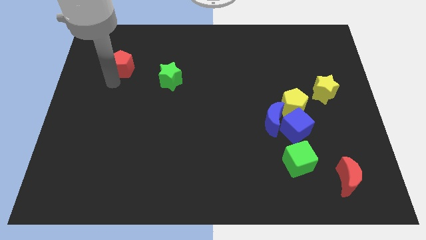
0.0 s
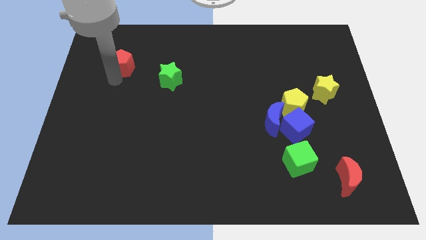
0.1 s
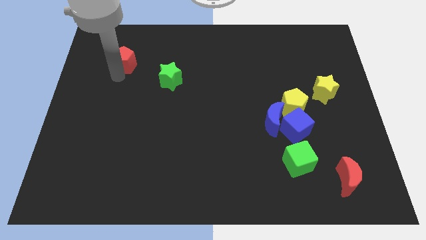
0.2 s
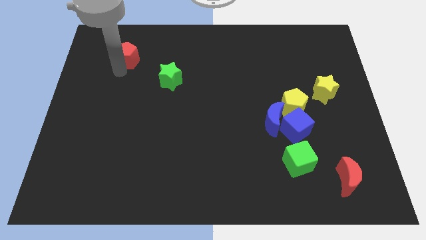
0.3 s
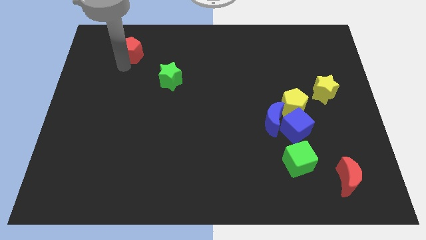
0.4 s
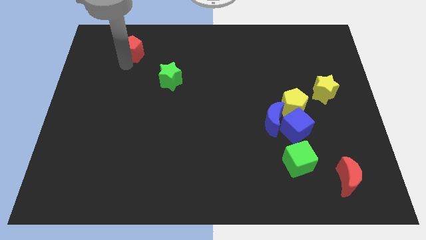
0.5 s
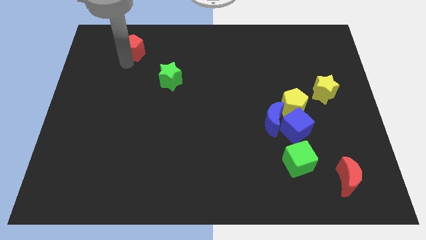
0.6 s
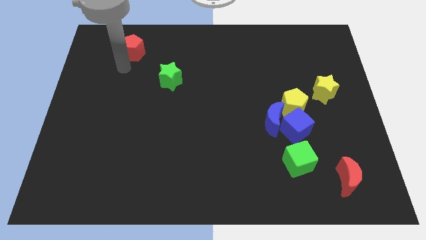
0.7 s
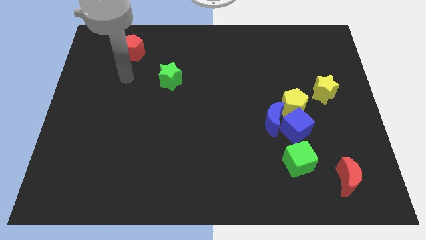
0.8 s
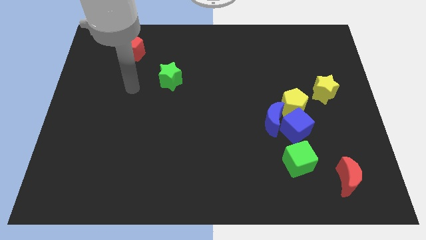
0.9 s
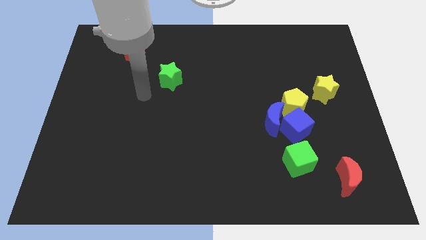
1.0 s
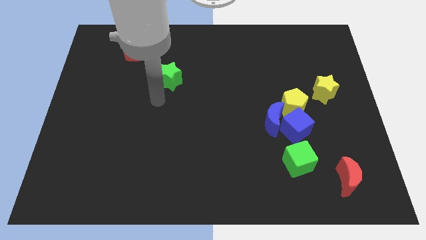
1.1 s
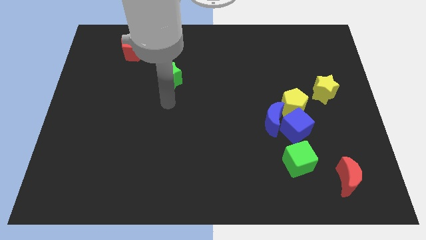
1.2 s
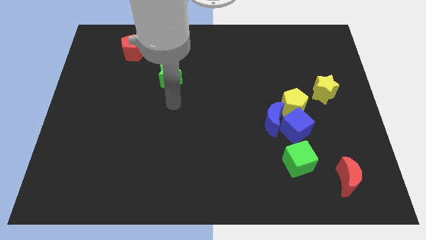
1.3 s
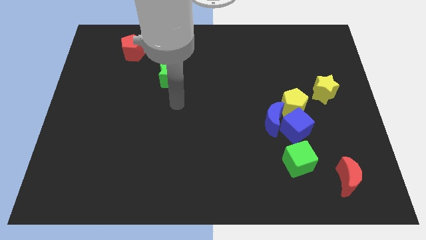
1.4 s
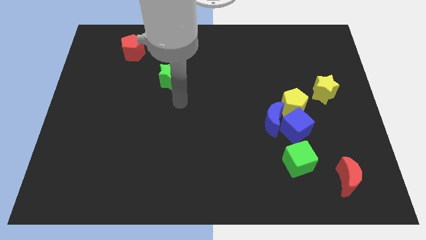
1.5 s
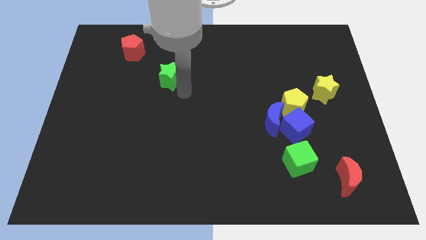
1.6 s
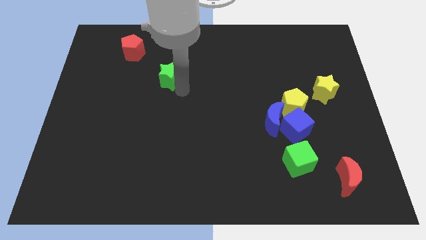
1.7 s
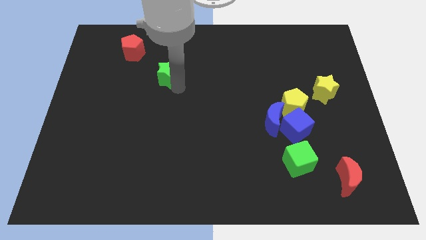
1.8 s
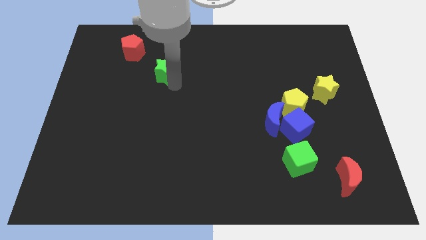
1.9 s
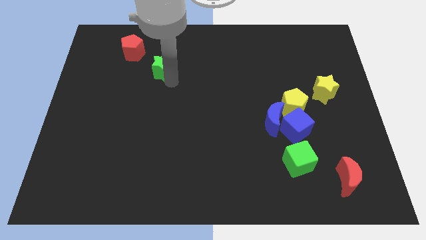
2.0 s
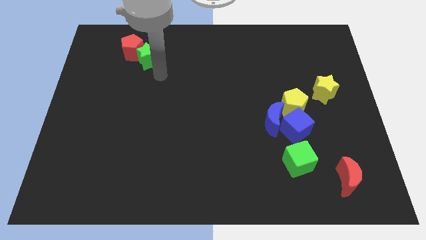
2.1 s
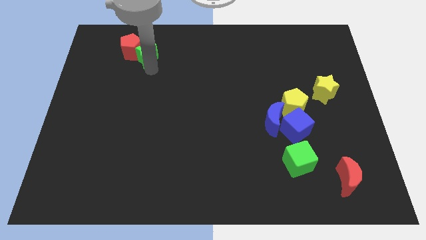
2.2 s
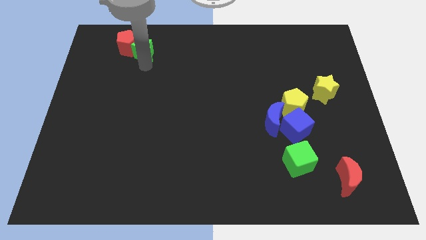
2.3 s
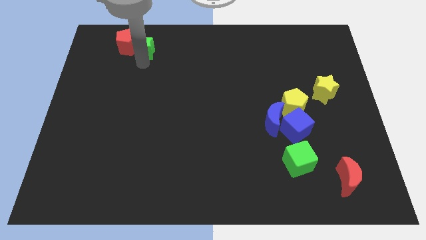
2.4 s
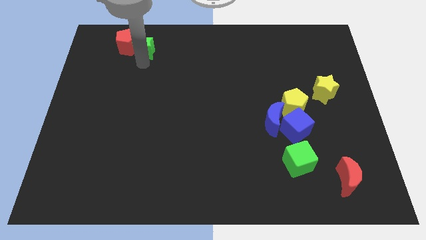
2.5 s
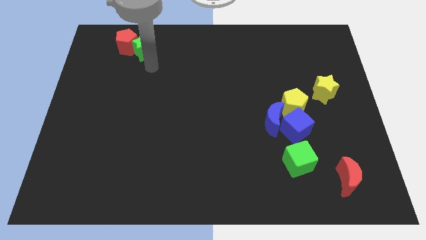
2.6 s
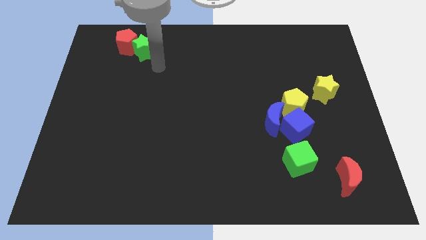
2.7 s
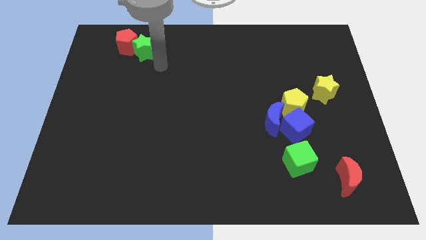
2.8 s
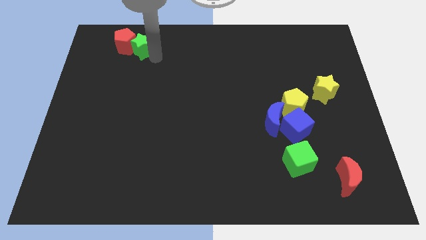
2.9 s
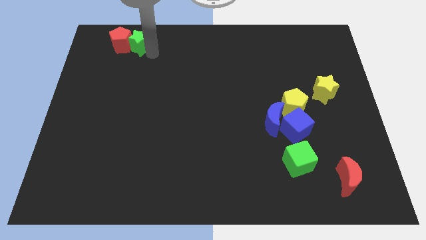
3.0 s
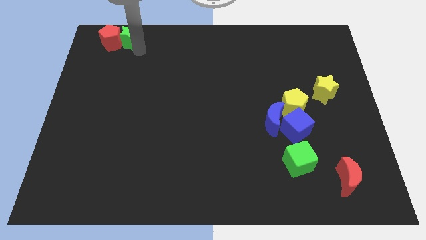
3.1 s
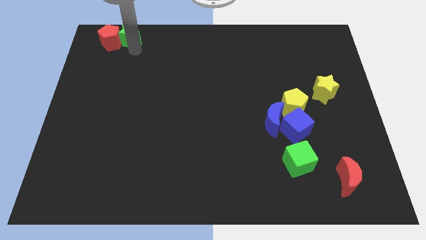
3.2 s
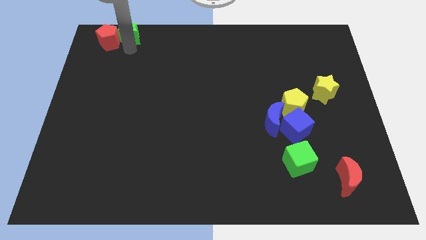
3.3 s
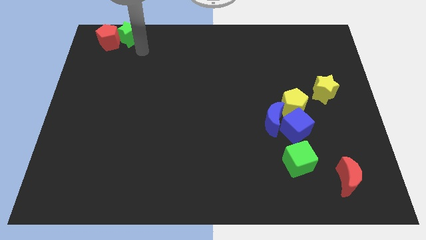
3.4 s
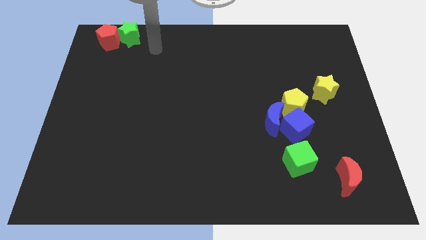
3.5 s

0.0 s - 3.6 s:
push red pentagon and green star at top left corner

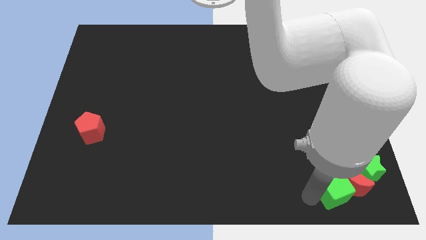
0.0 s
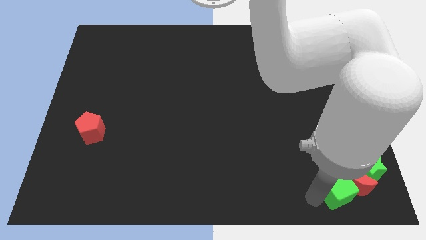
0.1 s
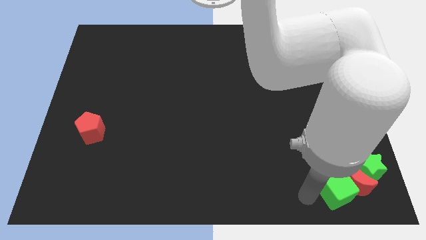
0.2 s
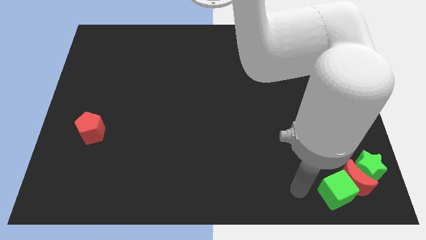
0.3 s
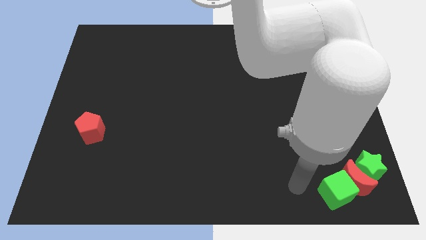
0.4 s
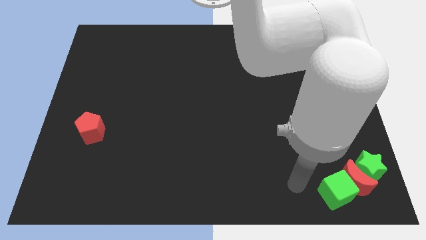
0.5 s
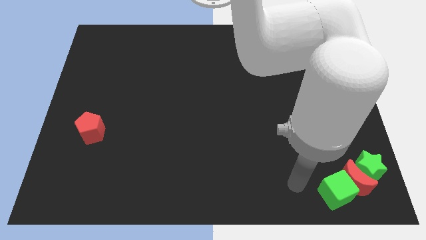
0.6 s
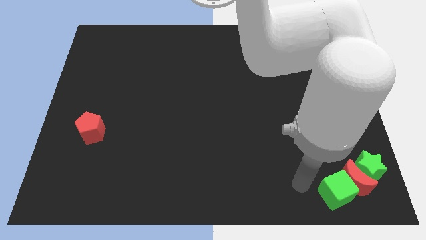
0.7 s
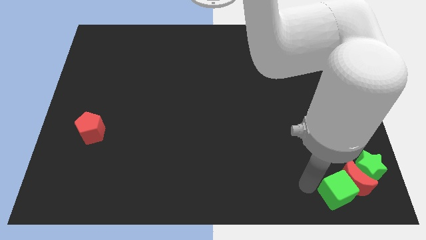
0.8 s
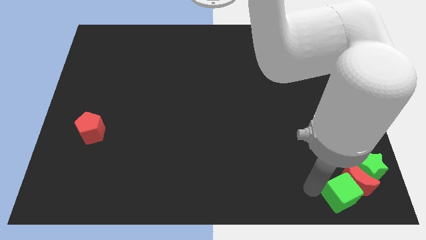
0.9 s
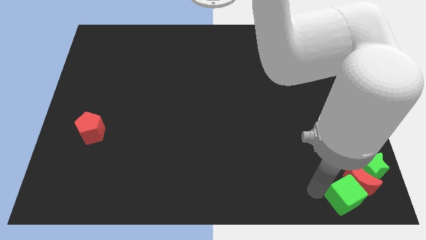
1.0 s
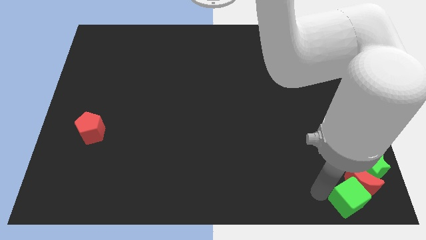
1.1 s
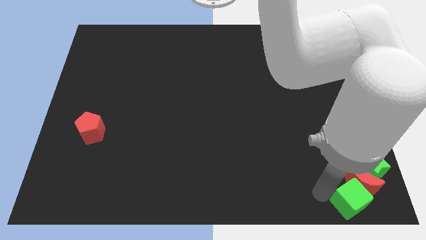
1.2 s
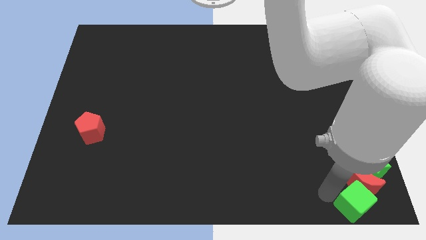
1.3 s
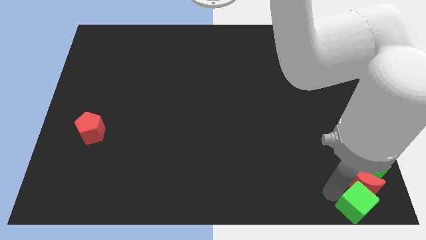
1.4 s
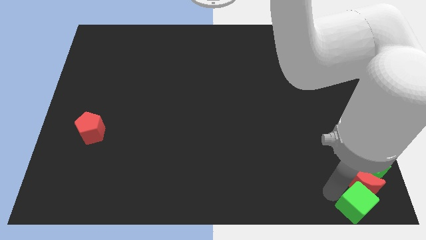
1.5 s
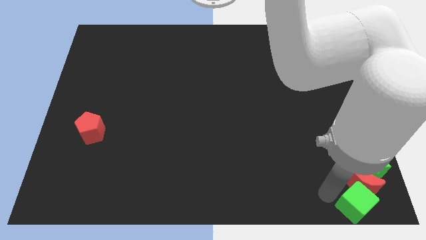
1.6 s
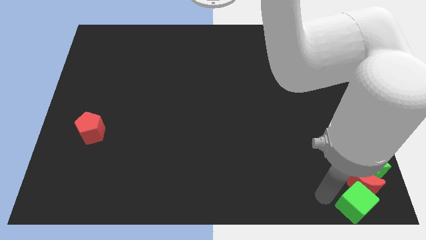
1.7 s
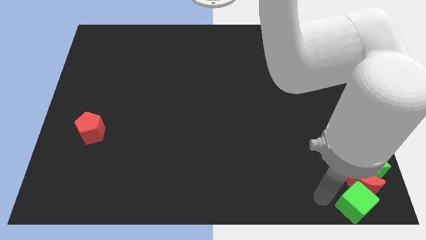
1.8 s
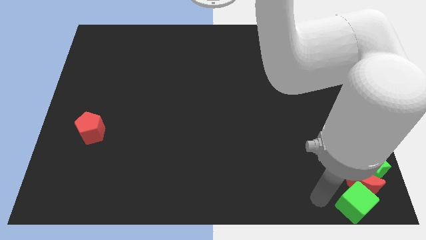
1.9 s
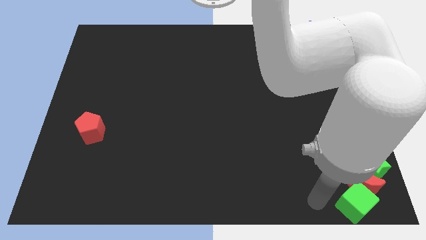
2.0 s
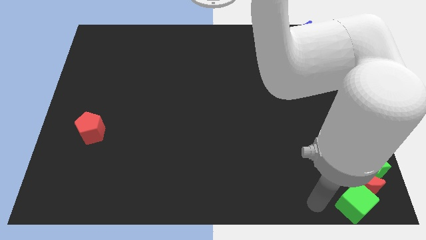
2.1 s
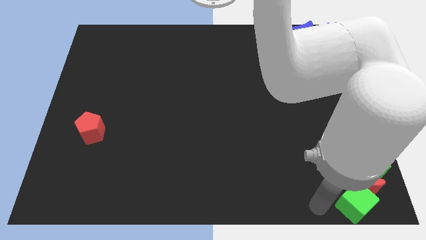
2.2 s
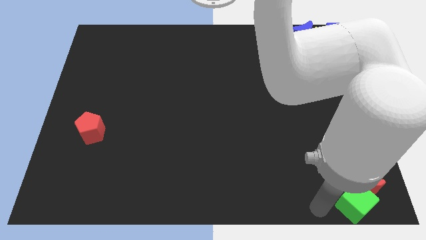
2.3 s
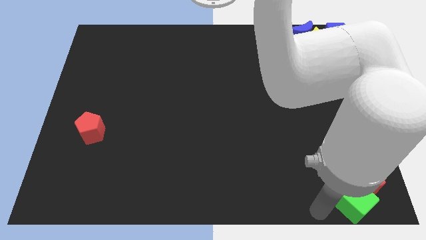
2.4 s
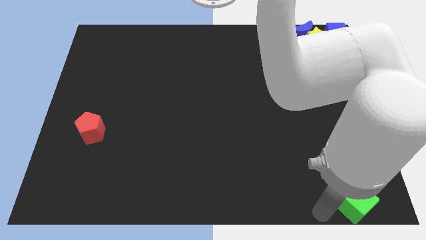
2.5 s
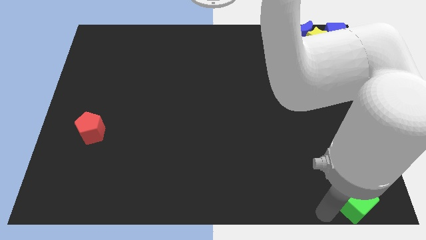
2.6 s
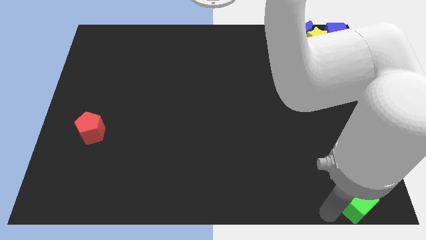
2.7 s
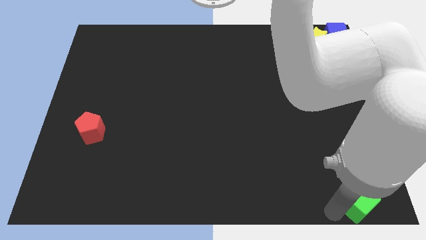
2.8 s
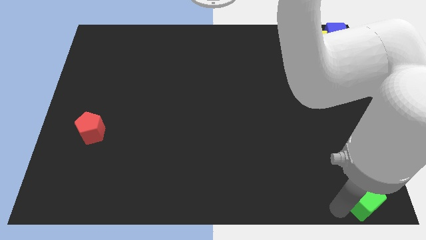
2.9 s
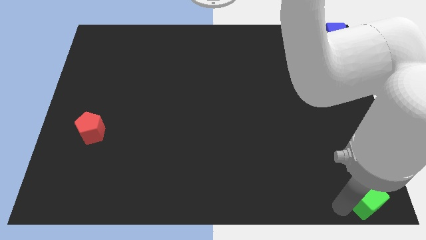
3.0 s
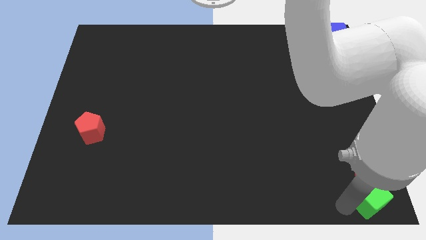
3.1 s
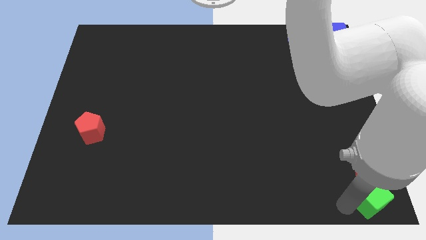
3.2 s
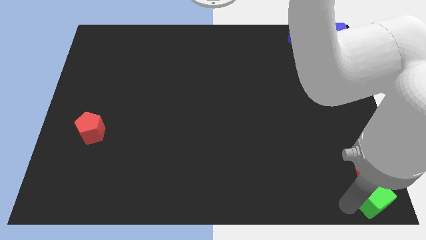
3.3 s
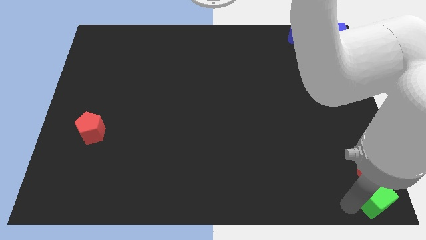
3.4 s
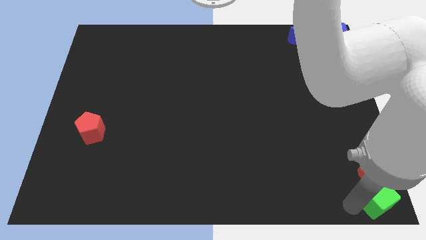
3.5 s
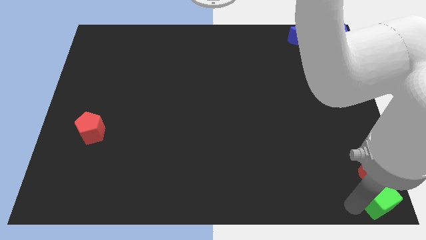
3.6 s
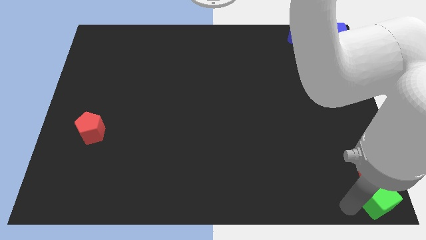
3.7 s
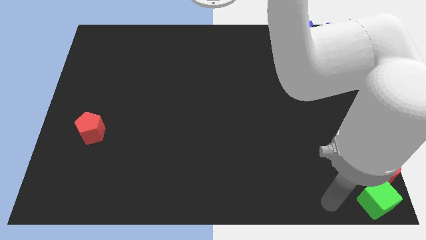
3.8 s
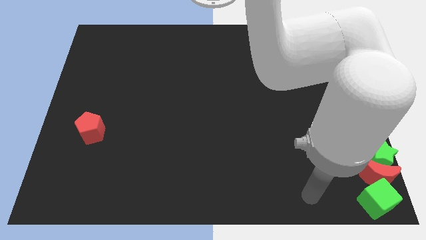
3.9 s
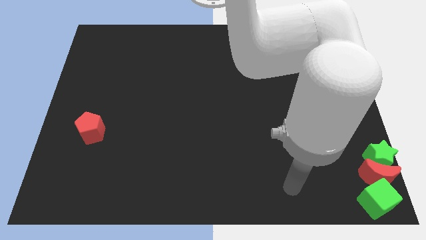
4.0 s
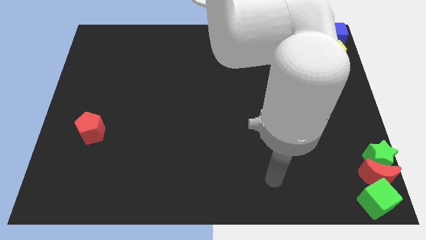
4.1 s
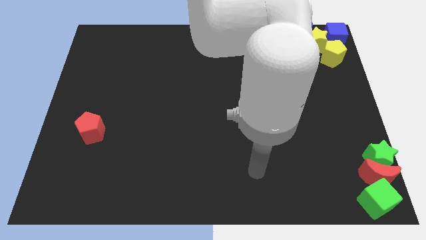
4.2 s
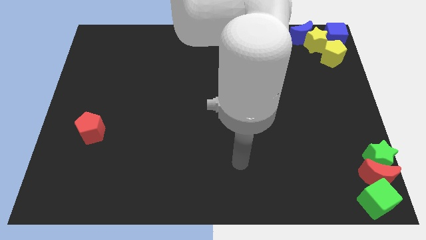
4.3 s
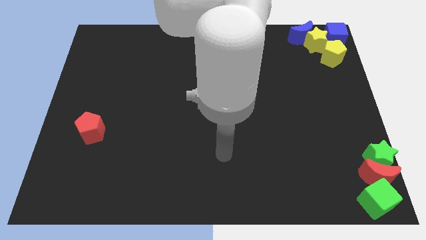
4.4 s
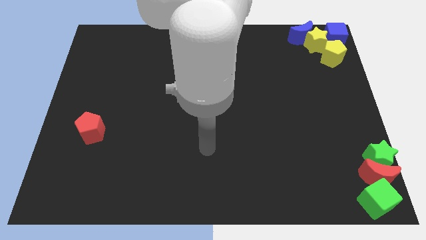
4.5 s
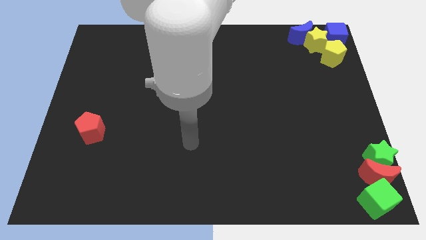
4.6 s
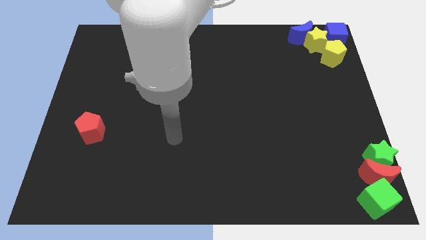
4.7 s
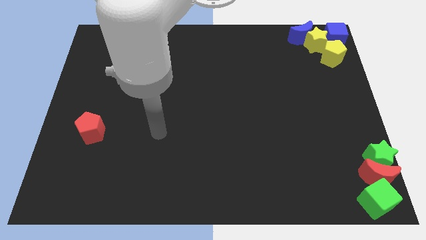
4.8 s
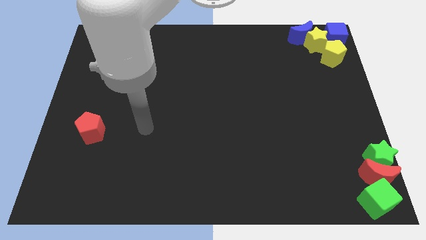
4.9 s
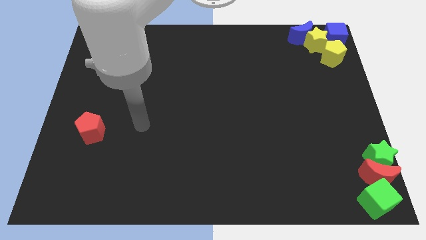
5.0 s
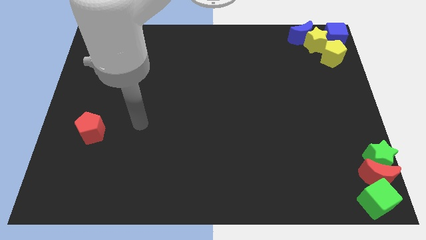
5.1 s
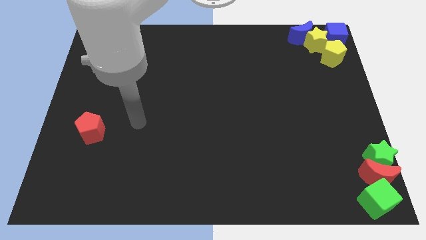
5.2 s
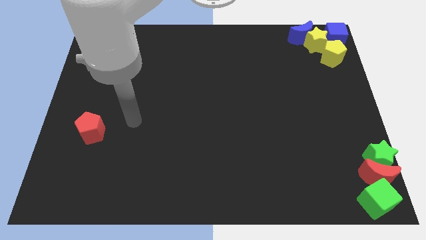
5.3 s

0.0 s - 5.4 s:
place the green cubered crescent and green star at the bottom right corner of the board
